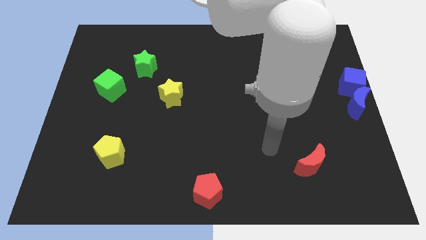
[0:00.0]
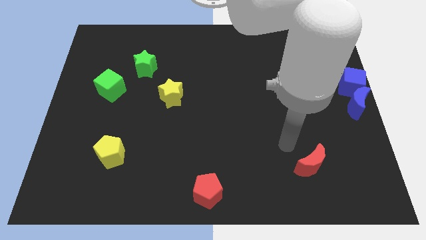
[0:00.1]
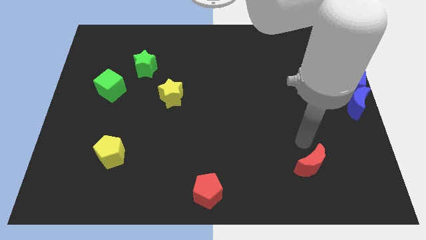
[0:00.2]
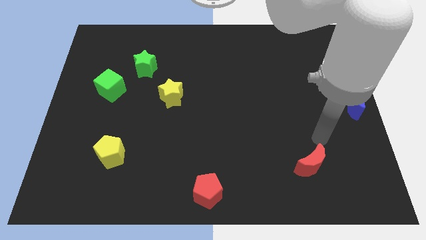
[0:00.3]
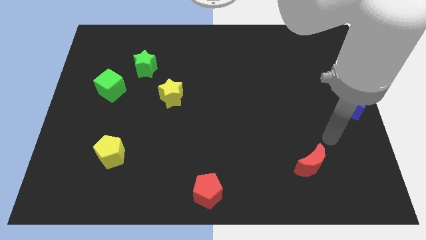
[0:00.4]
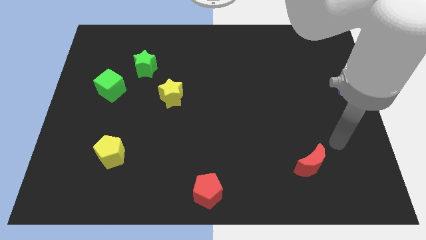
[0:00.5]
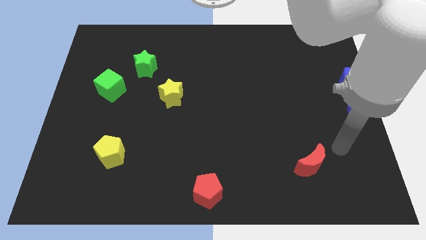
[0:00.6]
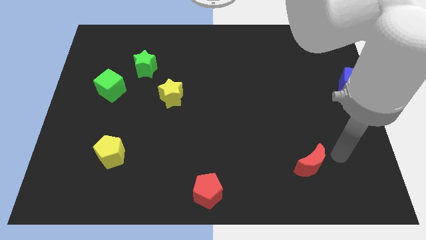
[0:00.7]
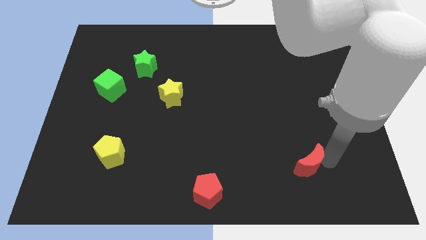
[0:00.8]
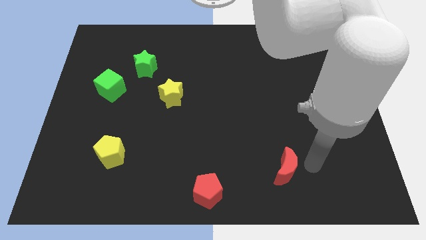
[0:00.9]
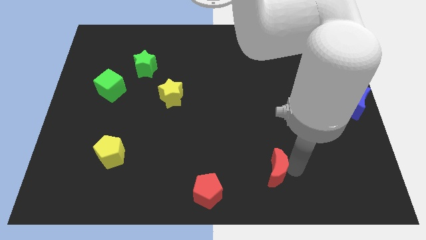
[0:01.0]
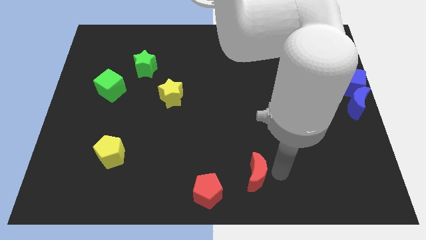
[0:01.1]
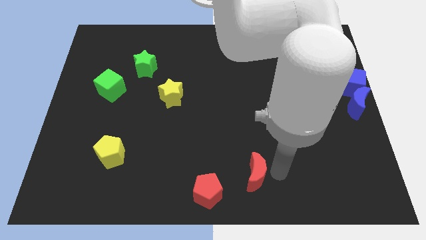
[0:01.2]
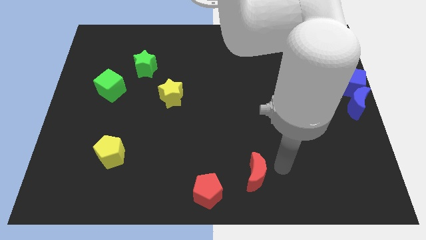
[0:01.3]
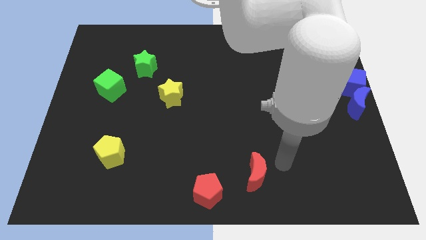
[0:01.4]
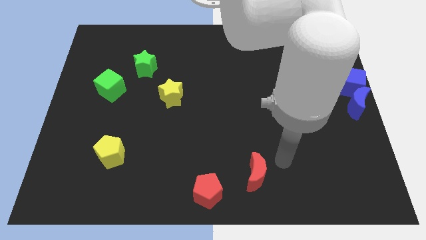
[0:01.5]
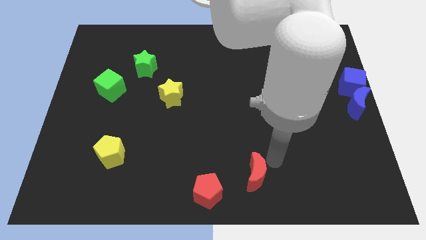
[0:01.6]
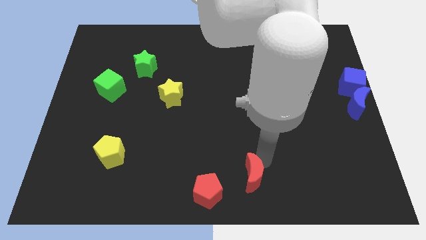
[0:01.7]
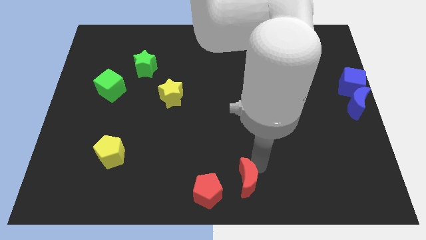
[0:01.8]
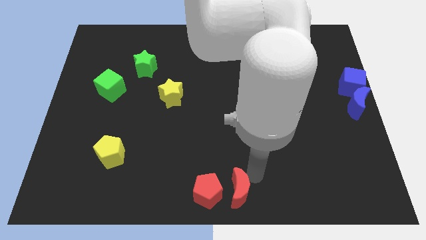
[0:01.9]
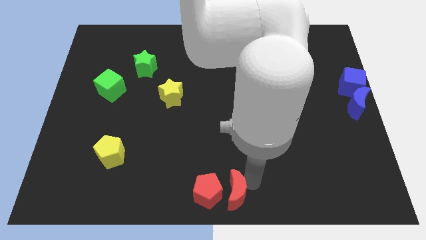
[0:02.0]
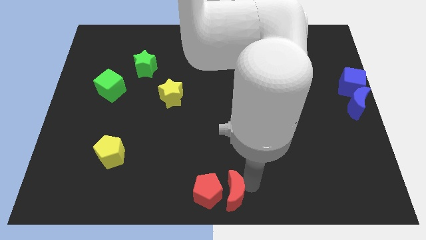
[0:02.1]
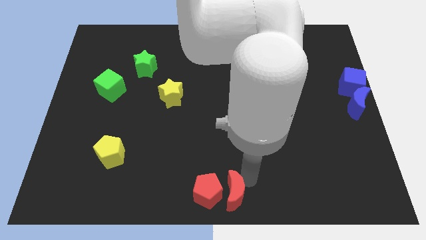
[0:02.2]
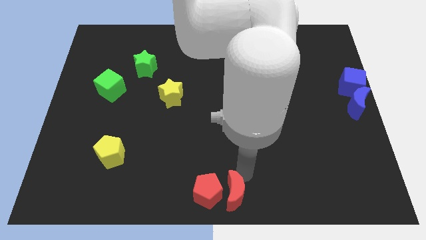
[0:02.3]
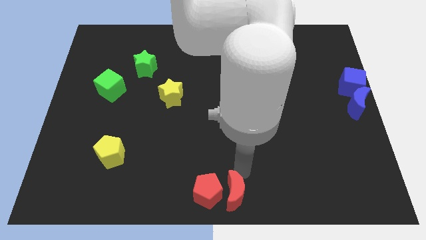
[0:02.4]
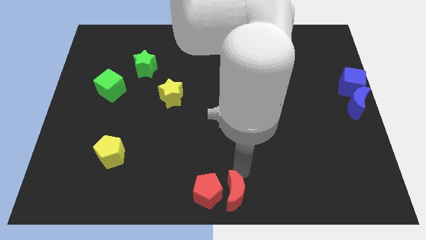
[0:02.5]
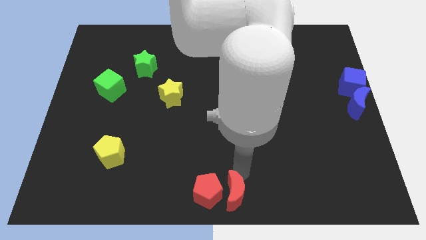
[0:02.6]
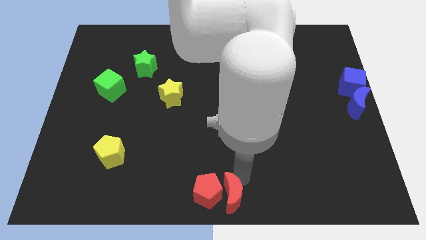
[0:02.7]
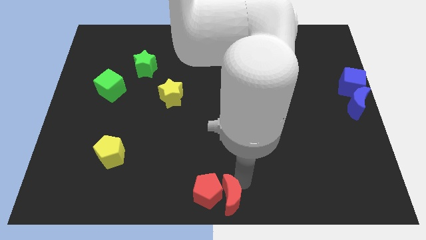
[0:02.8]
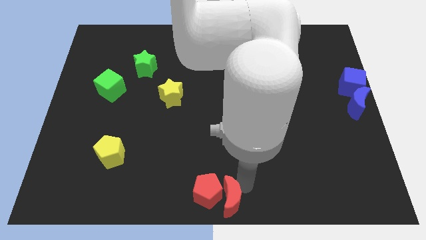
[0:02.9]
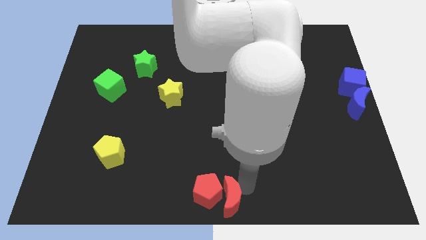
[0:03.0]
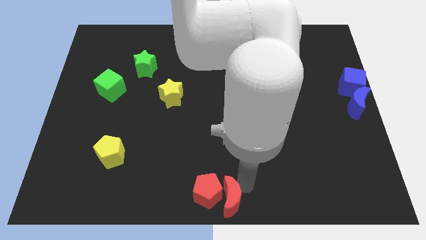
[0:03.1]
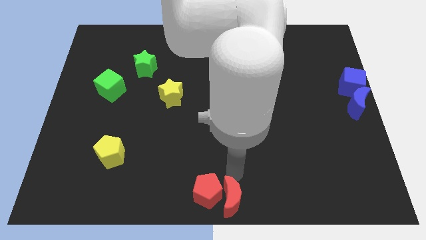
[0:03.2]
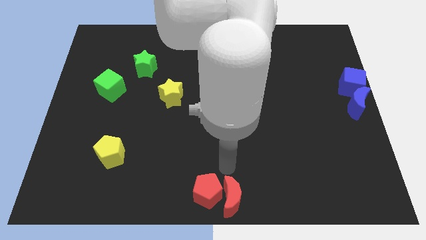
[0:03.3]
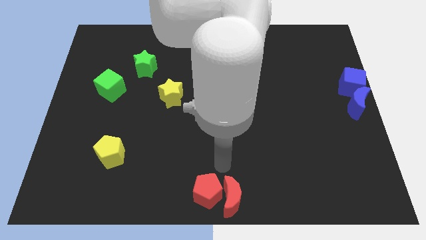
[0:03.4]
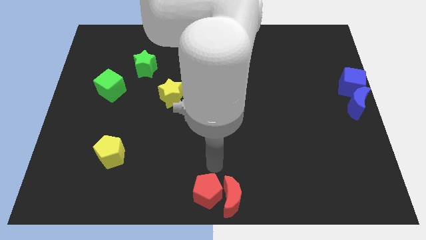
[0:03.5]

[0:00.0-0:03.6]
move the red moon to the right side of the red pentagon

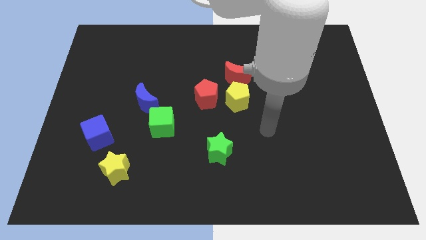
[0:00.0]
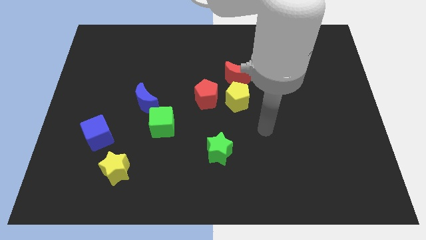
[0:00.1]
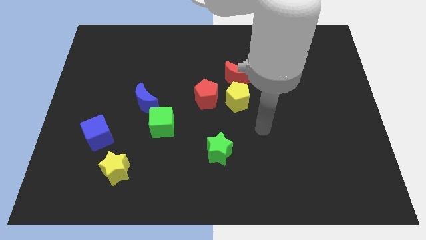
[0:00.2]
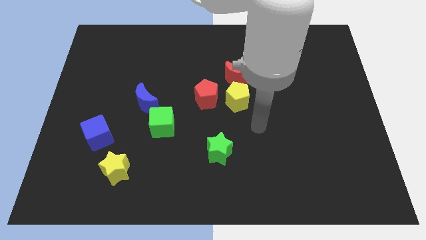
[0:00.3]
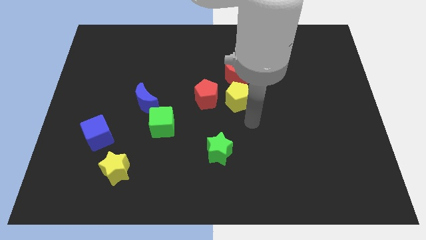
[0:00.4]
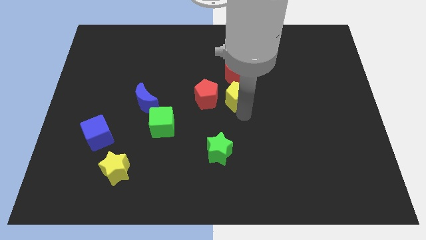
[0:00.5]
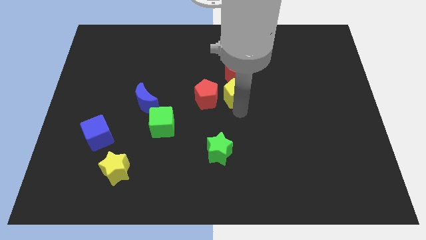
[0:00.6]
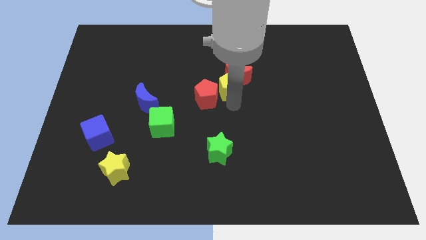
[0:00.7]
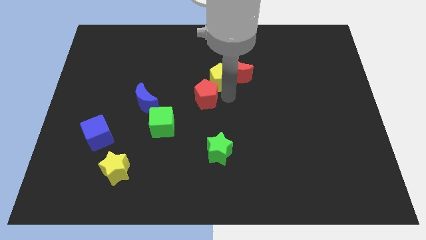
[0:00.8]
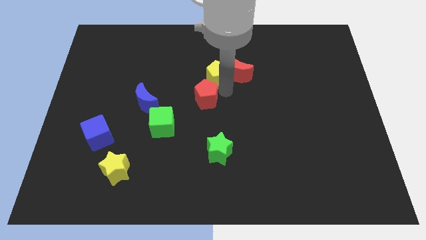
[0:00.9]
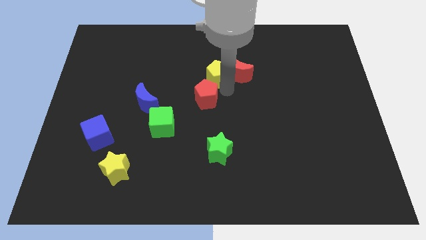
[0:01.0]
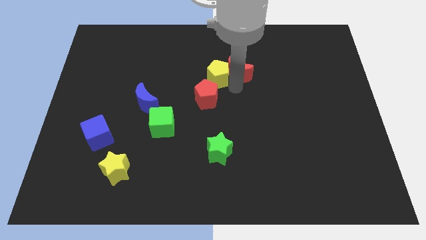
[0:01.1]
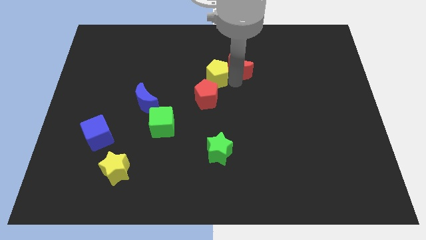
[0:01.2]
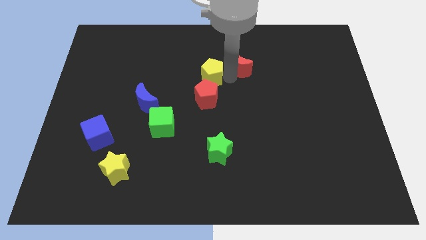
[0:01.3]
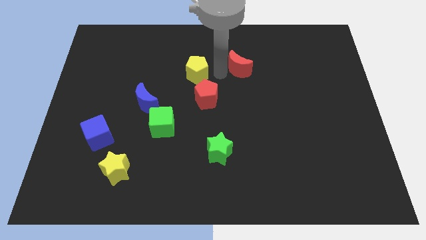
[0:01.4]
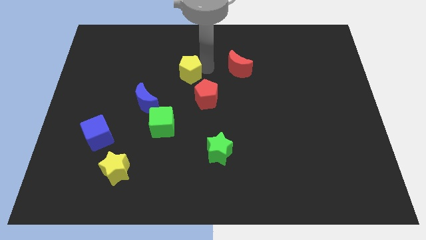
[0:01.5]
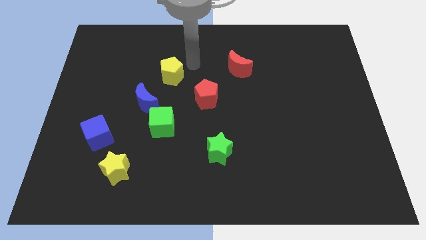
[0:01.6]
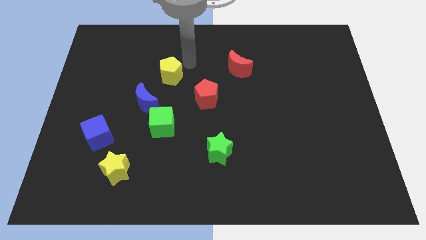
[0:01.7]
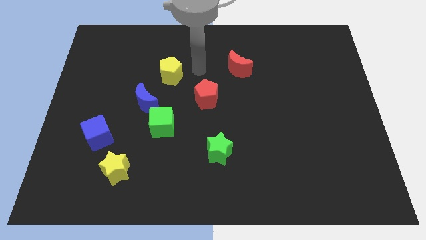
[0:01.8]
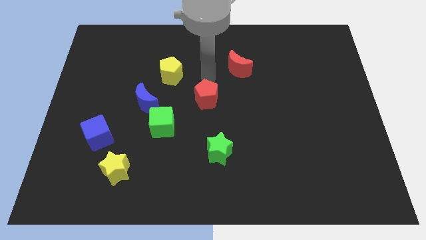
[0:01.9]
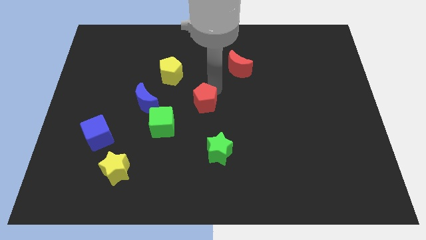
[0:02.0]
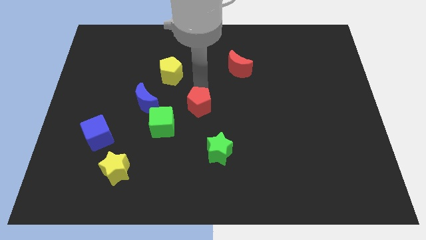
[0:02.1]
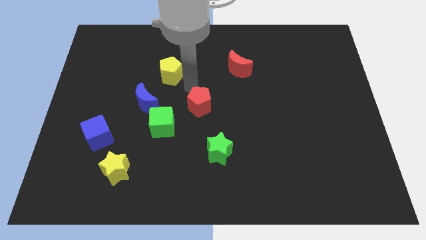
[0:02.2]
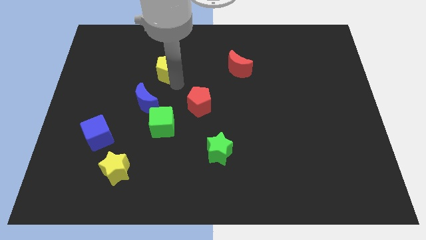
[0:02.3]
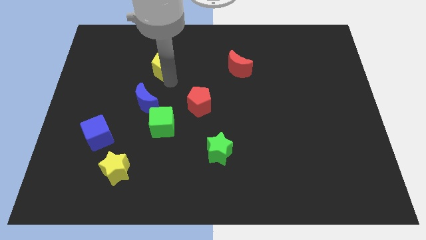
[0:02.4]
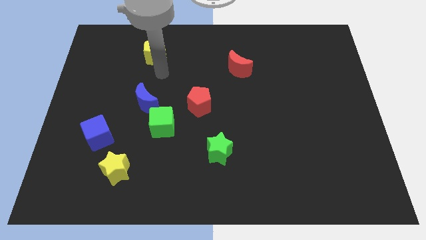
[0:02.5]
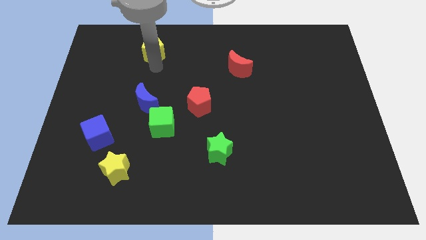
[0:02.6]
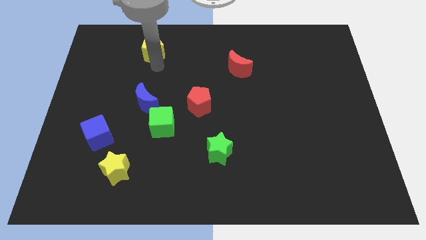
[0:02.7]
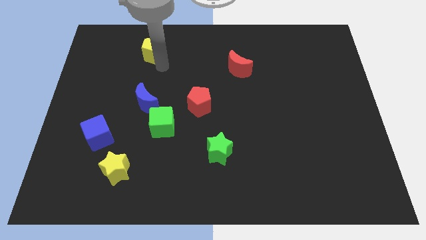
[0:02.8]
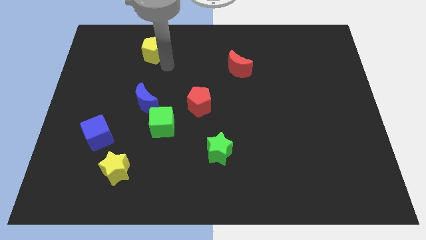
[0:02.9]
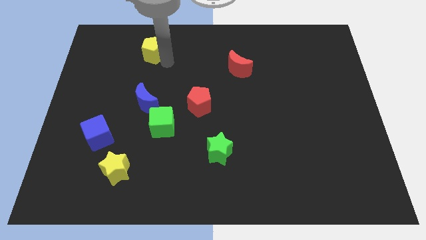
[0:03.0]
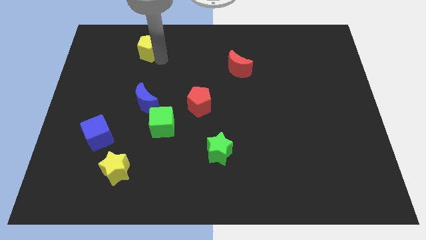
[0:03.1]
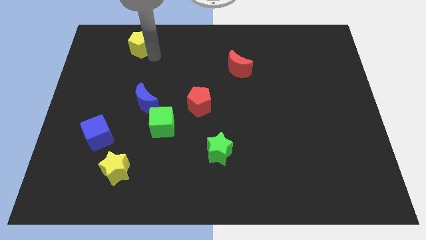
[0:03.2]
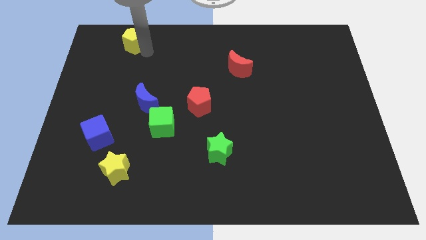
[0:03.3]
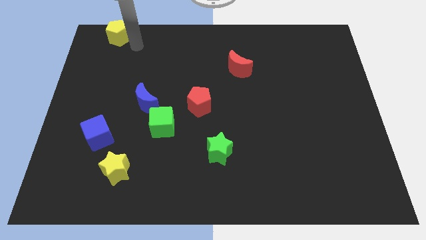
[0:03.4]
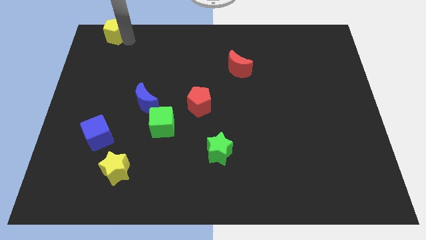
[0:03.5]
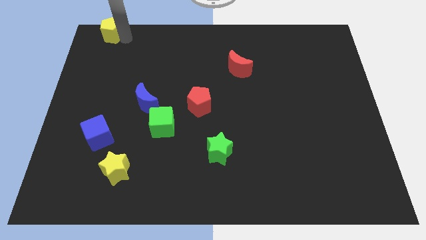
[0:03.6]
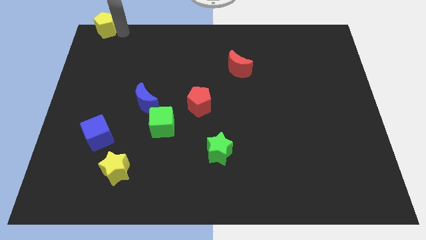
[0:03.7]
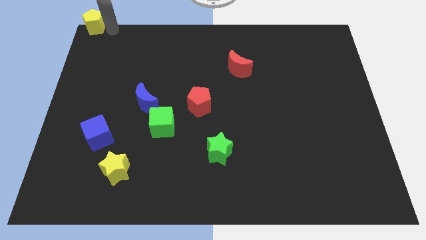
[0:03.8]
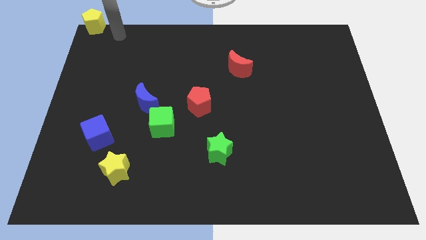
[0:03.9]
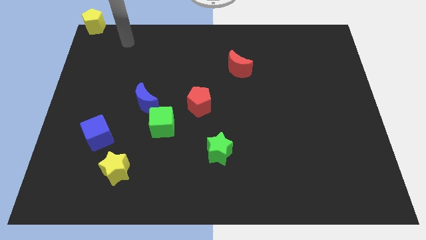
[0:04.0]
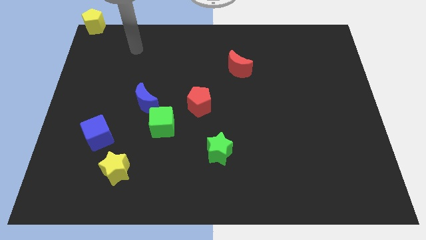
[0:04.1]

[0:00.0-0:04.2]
place the yellow pentagon to the top left of the board

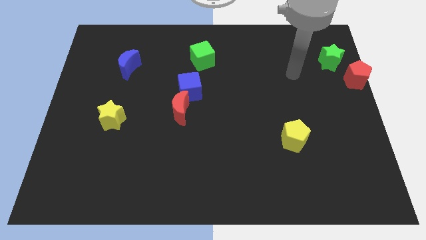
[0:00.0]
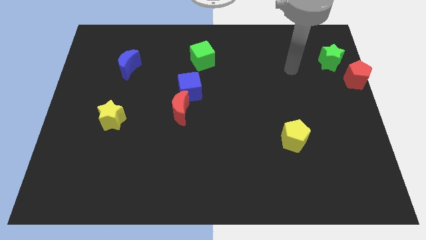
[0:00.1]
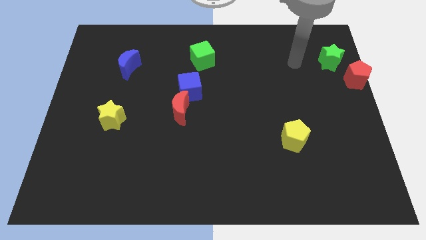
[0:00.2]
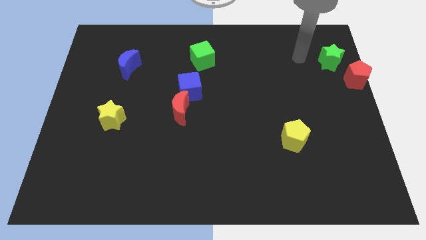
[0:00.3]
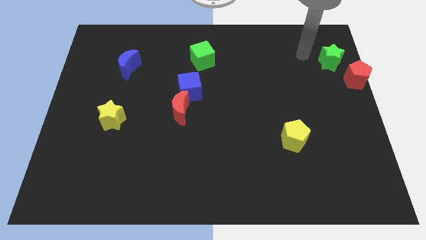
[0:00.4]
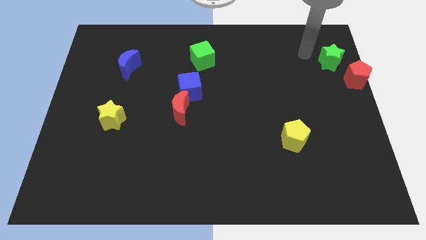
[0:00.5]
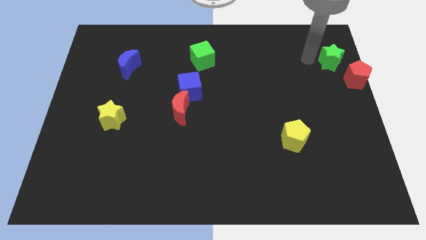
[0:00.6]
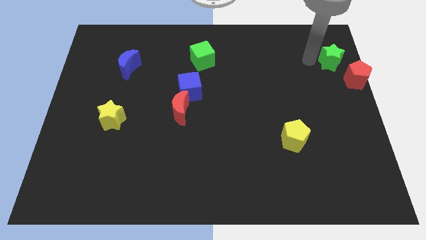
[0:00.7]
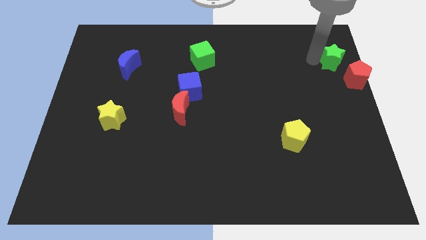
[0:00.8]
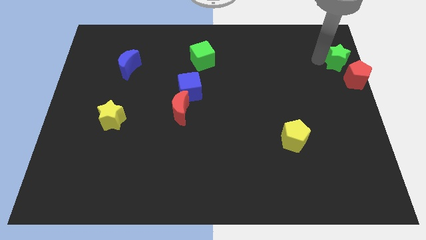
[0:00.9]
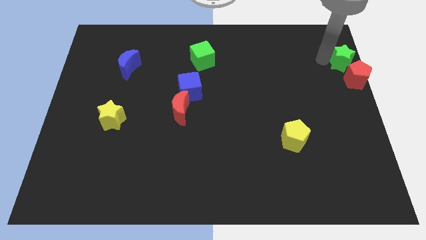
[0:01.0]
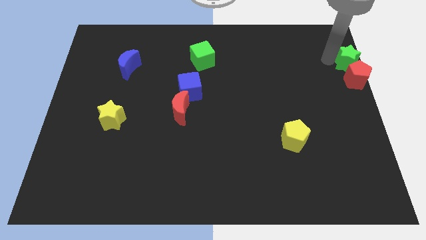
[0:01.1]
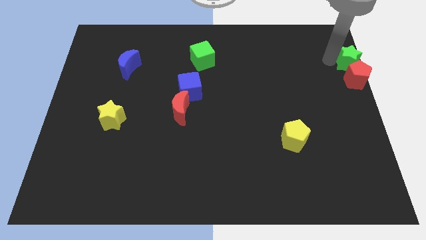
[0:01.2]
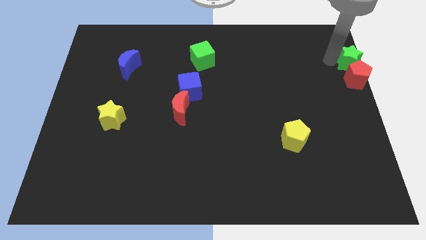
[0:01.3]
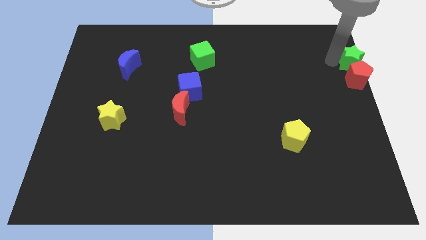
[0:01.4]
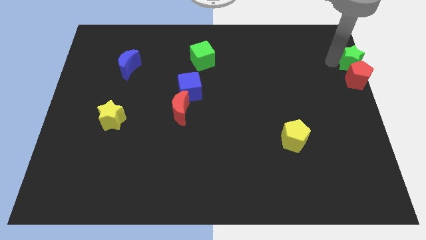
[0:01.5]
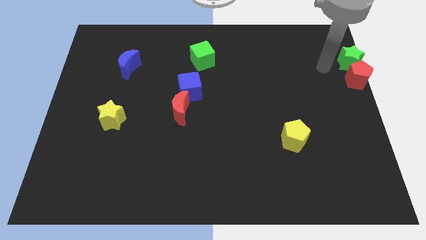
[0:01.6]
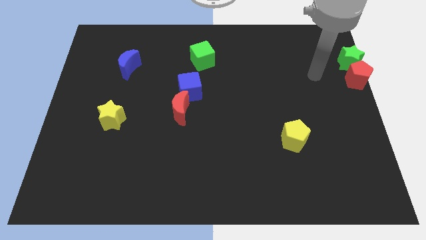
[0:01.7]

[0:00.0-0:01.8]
move the green star above the red pentagon
